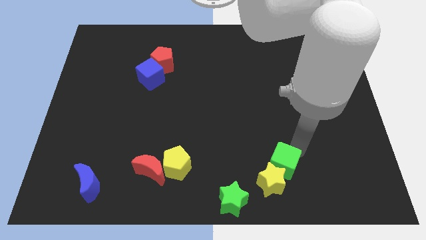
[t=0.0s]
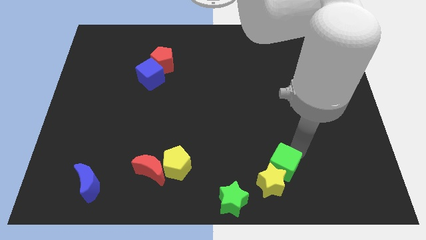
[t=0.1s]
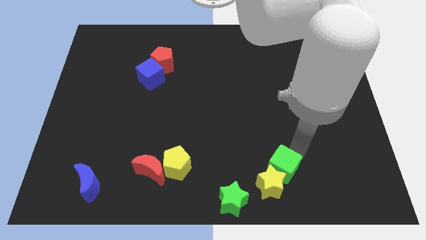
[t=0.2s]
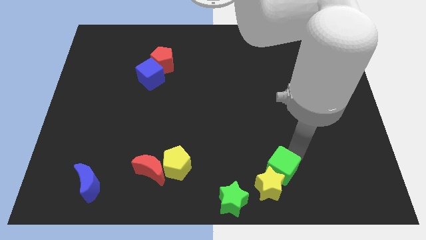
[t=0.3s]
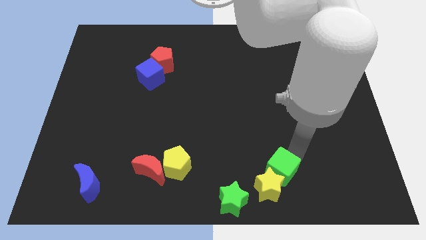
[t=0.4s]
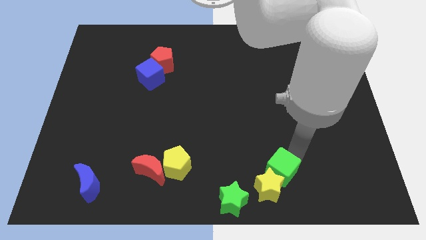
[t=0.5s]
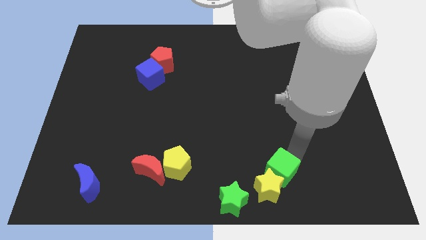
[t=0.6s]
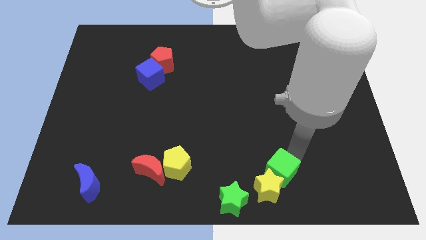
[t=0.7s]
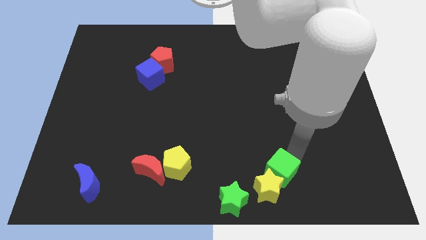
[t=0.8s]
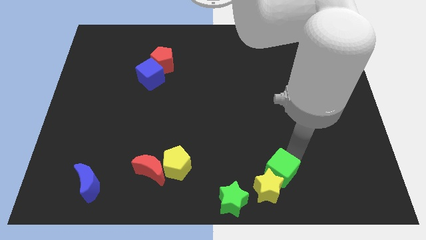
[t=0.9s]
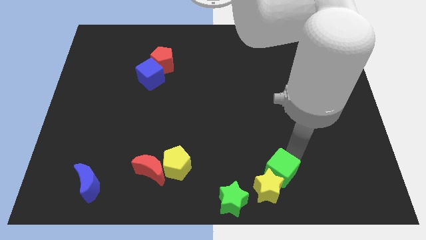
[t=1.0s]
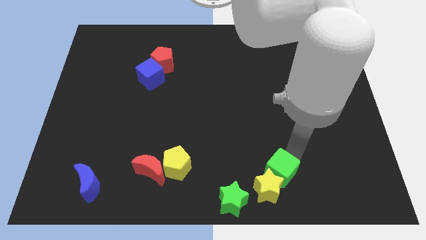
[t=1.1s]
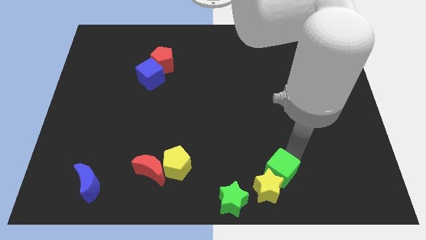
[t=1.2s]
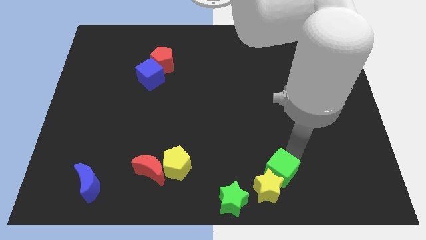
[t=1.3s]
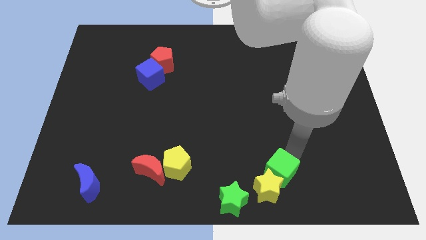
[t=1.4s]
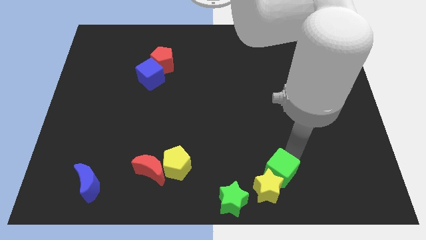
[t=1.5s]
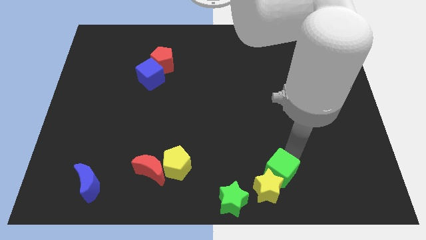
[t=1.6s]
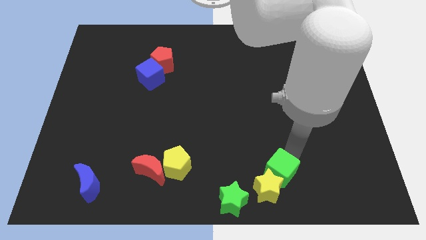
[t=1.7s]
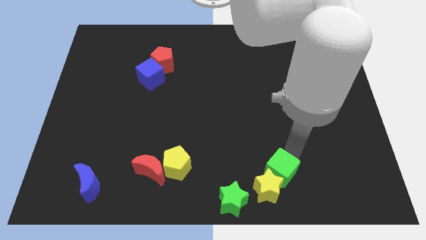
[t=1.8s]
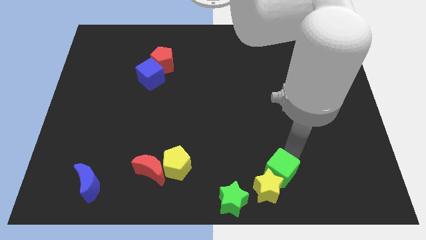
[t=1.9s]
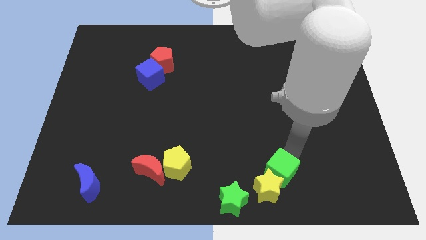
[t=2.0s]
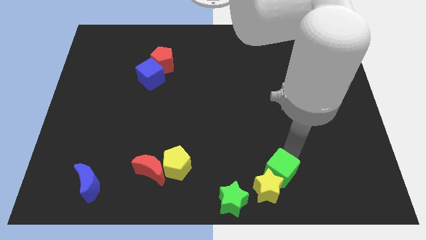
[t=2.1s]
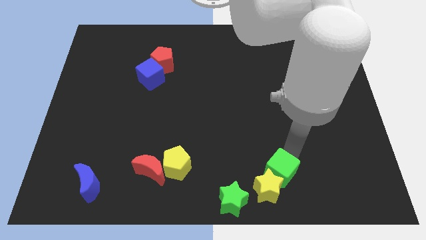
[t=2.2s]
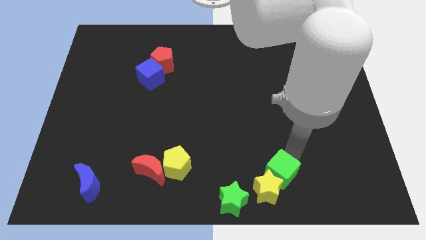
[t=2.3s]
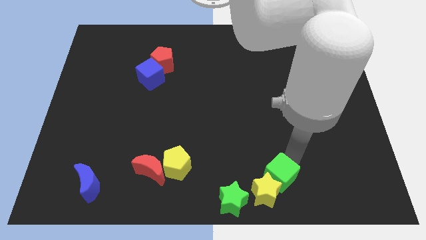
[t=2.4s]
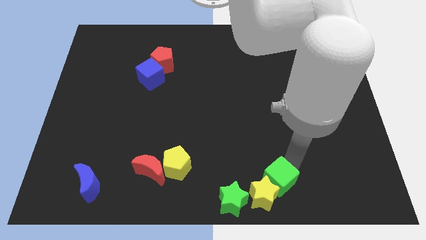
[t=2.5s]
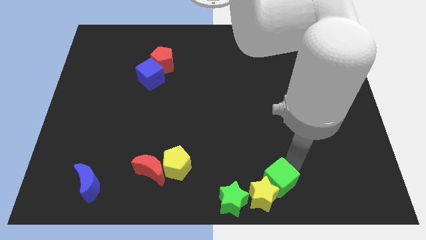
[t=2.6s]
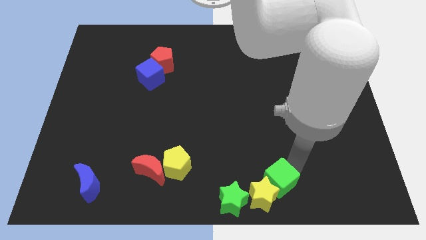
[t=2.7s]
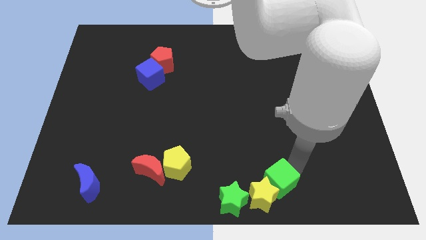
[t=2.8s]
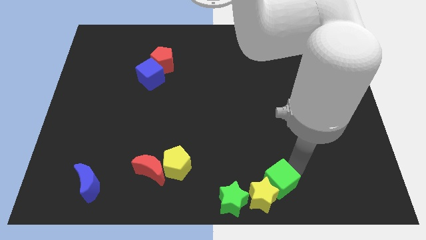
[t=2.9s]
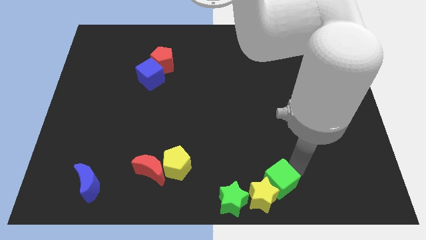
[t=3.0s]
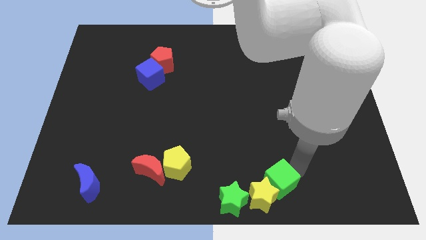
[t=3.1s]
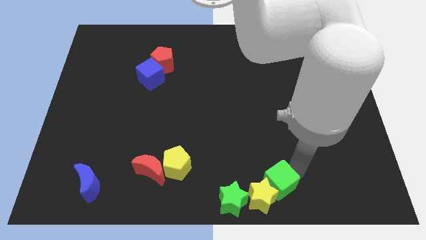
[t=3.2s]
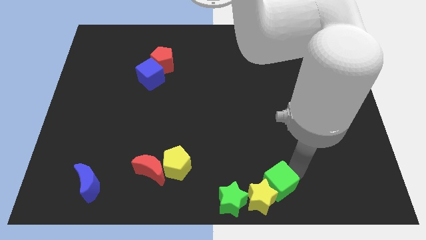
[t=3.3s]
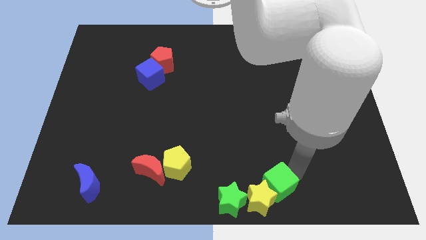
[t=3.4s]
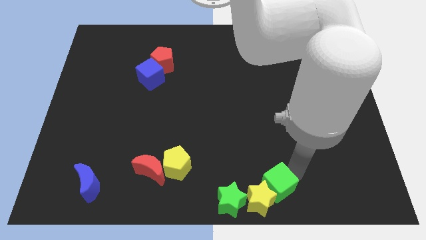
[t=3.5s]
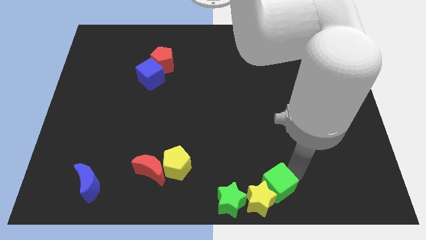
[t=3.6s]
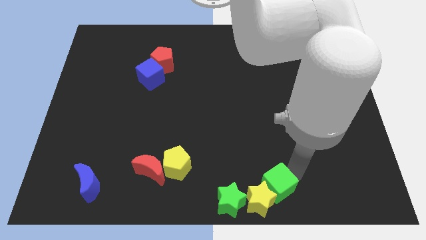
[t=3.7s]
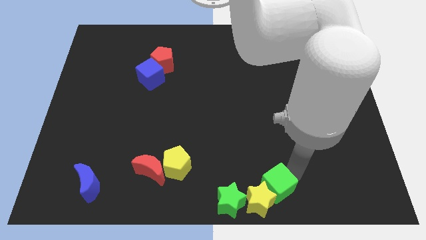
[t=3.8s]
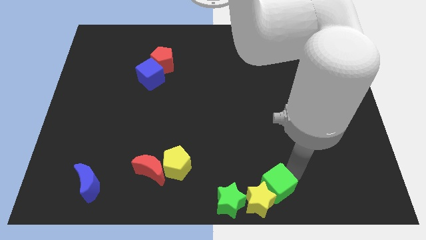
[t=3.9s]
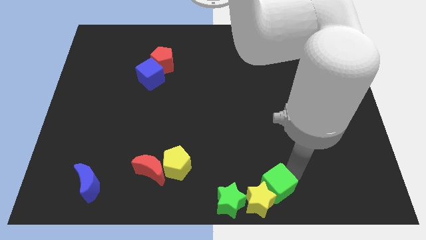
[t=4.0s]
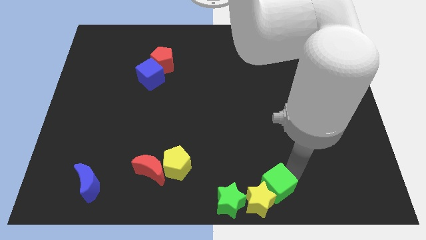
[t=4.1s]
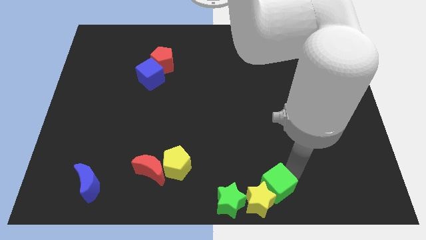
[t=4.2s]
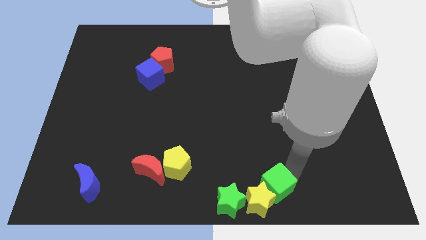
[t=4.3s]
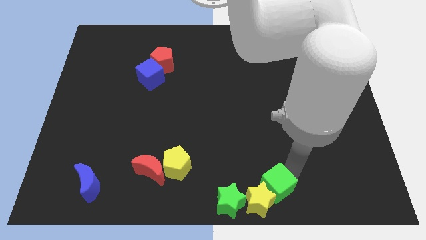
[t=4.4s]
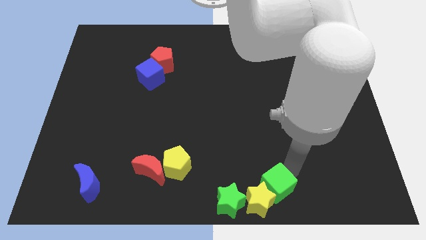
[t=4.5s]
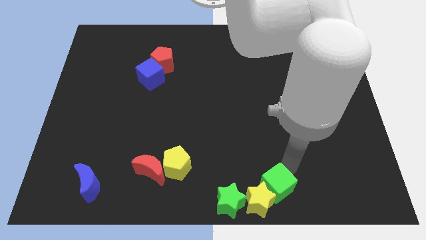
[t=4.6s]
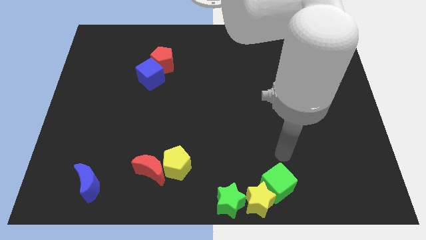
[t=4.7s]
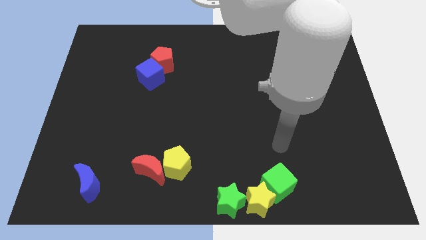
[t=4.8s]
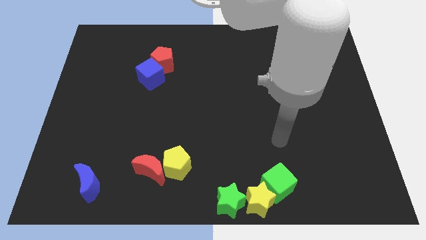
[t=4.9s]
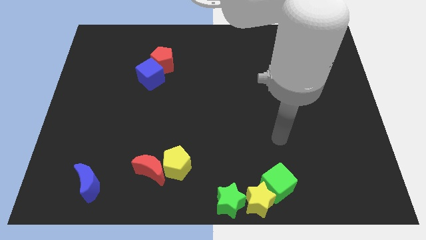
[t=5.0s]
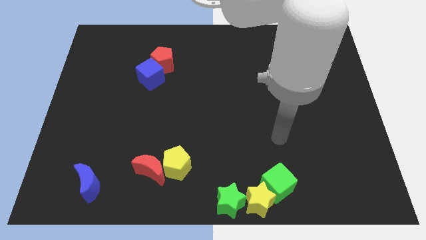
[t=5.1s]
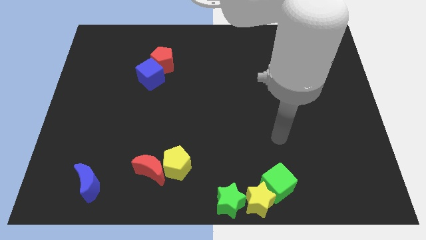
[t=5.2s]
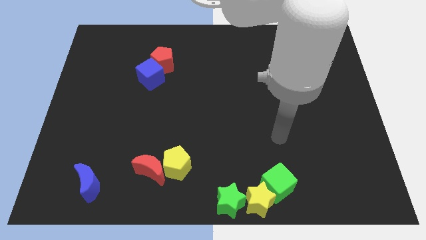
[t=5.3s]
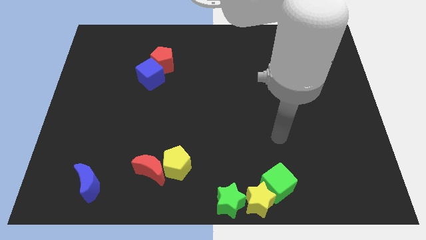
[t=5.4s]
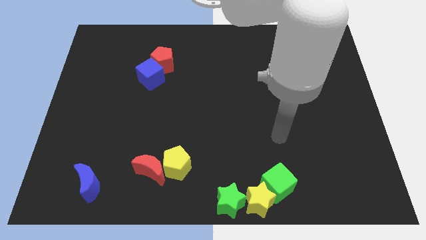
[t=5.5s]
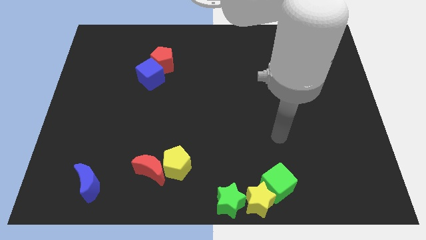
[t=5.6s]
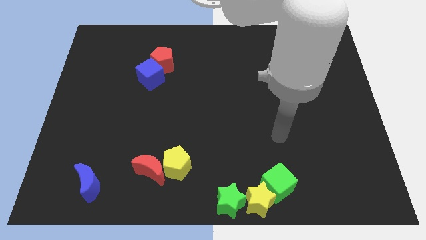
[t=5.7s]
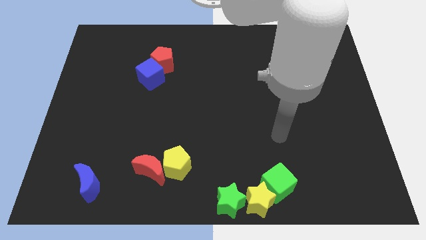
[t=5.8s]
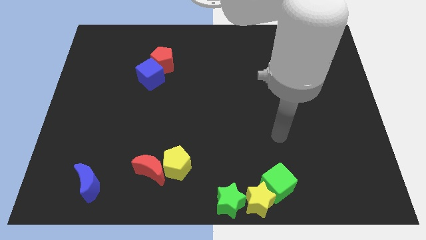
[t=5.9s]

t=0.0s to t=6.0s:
push the green cube and yellow star in to the bottom center

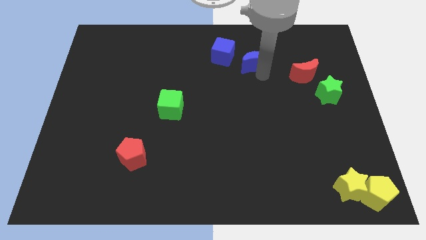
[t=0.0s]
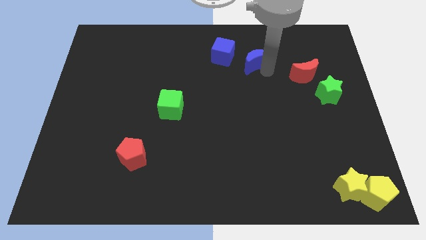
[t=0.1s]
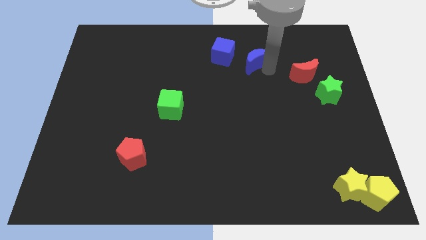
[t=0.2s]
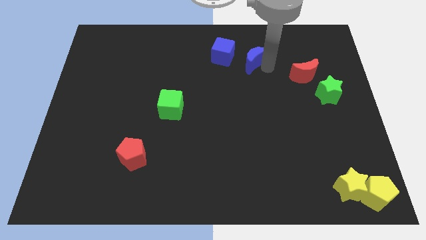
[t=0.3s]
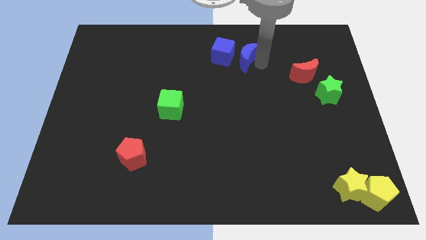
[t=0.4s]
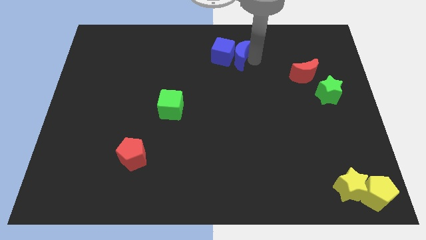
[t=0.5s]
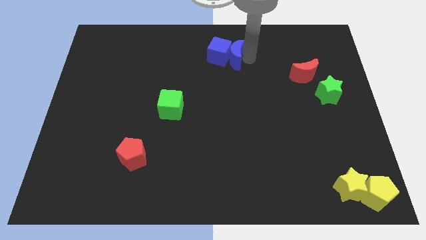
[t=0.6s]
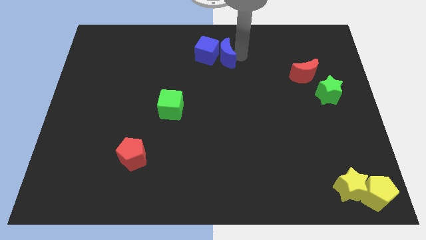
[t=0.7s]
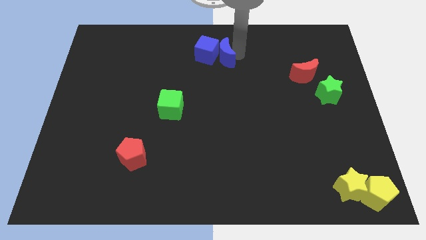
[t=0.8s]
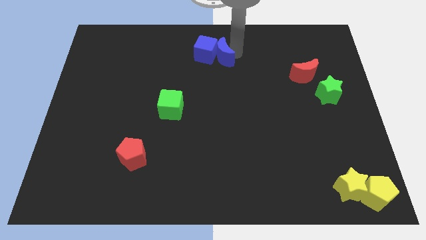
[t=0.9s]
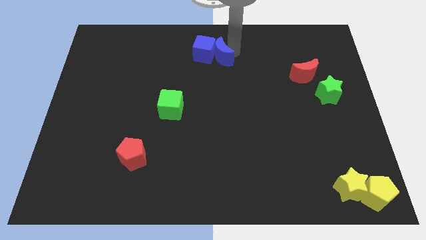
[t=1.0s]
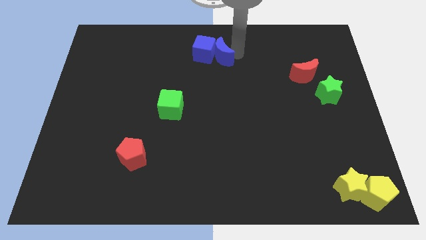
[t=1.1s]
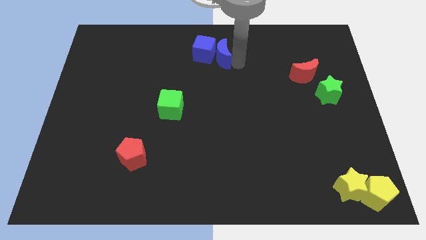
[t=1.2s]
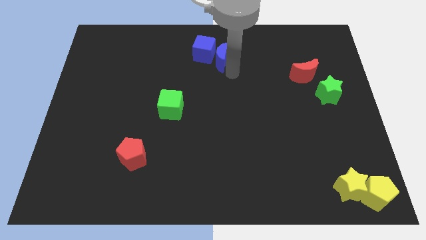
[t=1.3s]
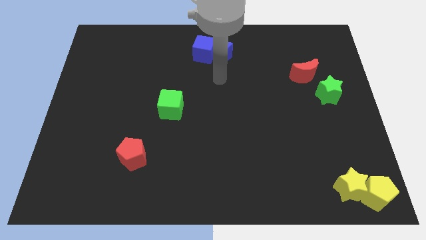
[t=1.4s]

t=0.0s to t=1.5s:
push blue moon into the blue cube

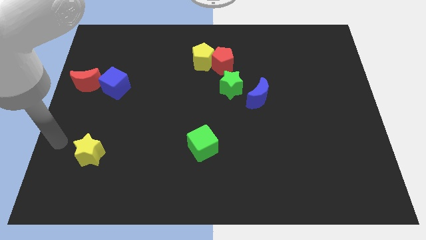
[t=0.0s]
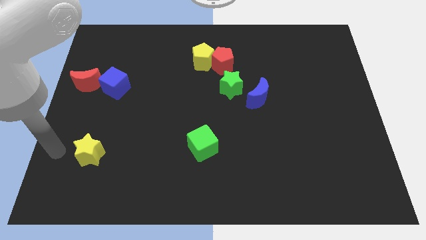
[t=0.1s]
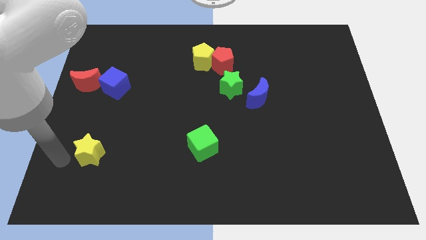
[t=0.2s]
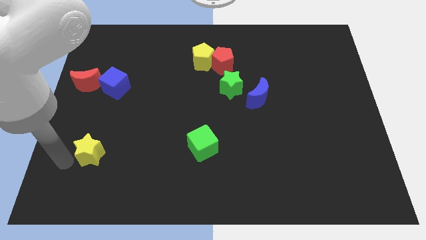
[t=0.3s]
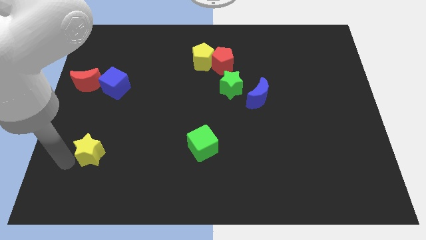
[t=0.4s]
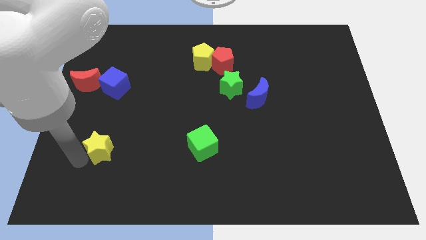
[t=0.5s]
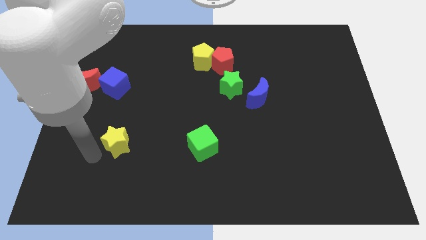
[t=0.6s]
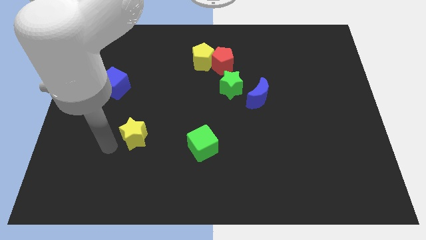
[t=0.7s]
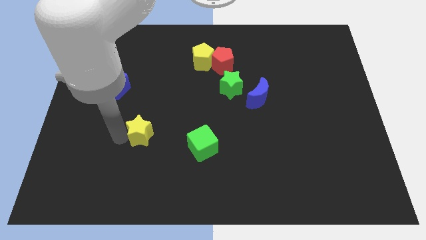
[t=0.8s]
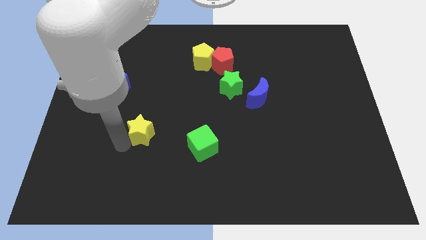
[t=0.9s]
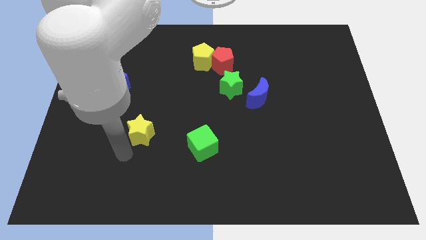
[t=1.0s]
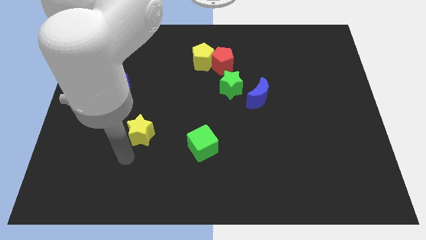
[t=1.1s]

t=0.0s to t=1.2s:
move the yellow star towards center of the board

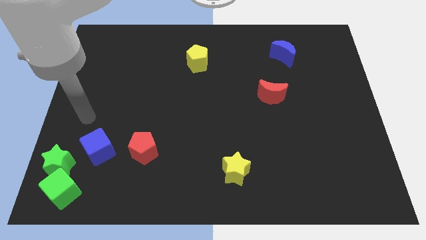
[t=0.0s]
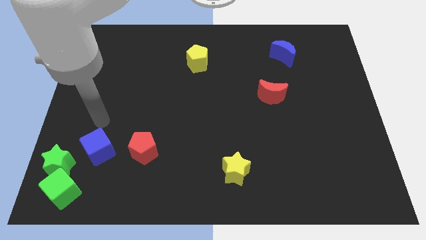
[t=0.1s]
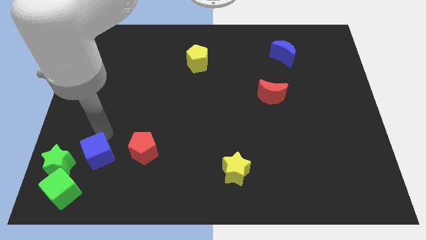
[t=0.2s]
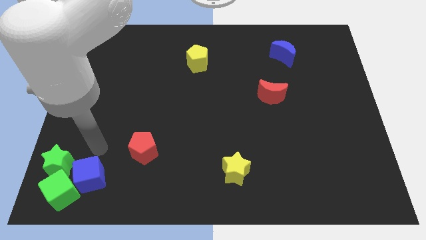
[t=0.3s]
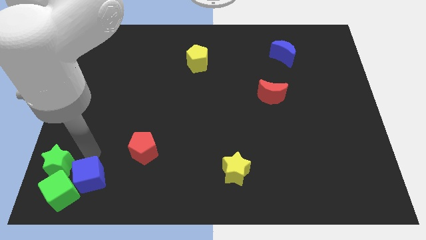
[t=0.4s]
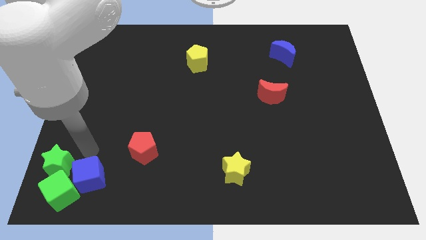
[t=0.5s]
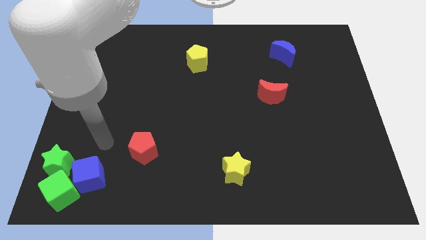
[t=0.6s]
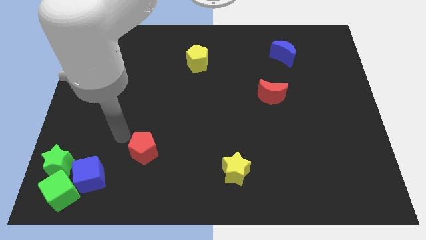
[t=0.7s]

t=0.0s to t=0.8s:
move the blue cube into the green cube
